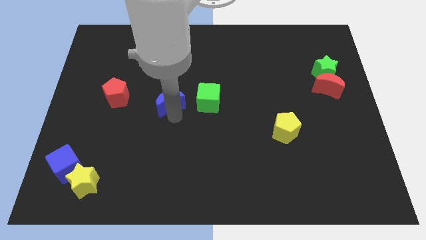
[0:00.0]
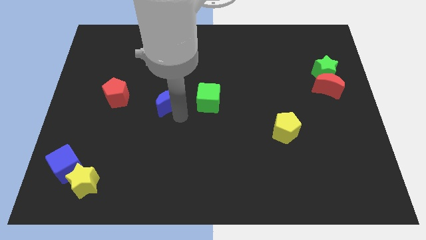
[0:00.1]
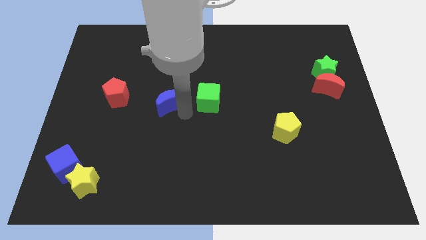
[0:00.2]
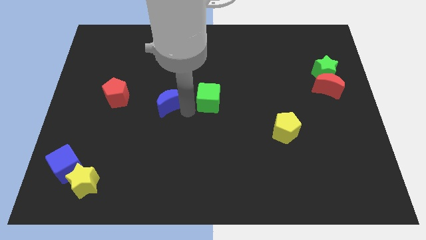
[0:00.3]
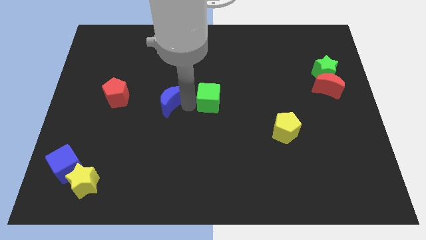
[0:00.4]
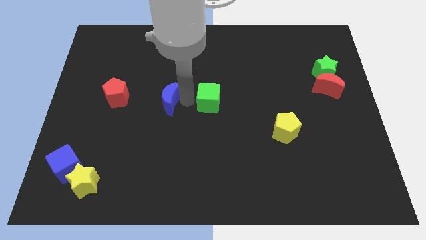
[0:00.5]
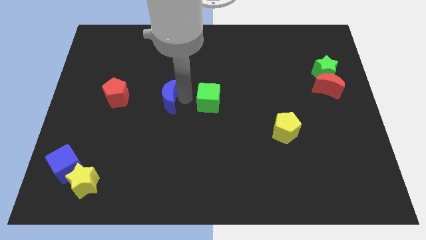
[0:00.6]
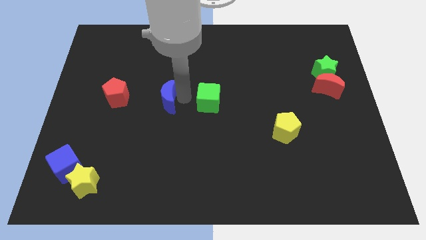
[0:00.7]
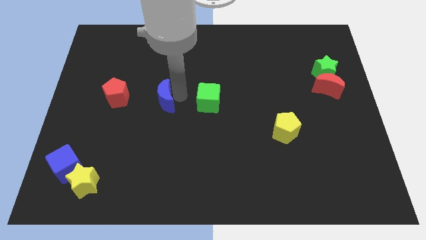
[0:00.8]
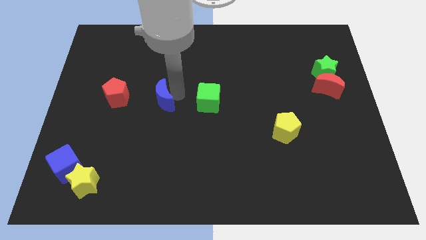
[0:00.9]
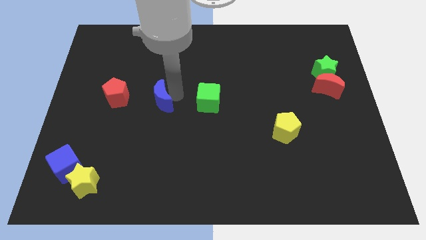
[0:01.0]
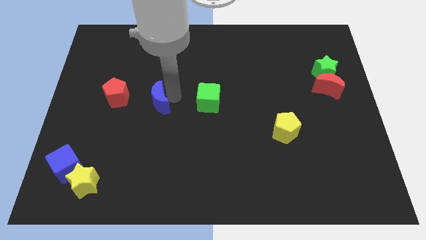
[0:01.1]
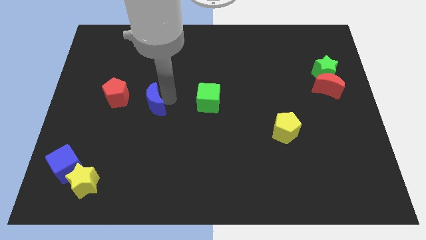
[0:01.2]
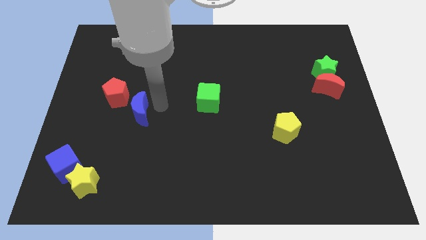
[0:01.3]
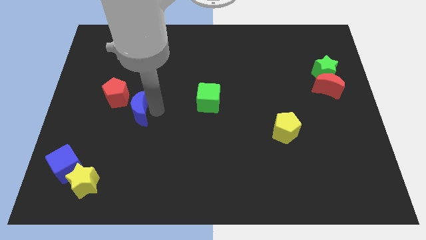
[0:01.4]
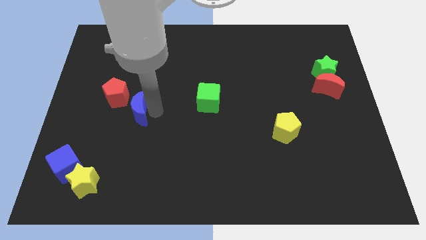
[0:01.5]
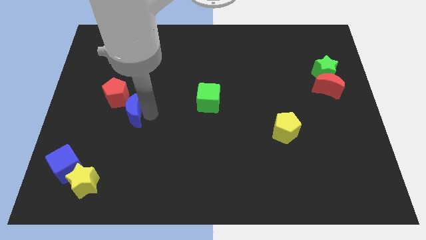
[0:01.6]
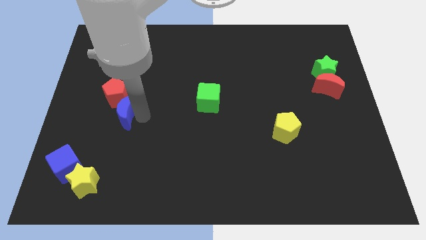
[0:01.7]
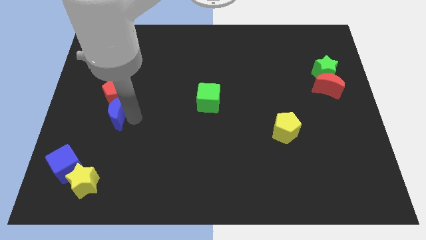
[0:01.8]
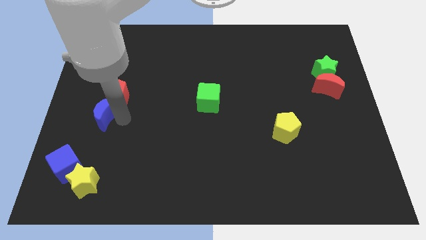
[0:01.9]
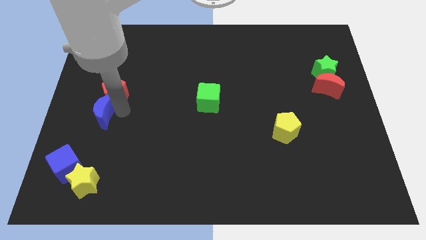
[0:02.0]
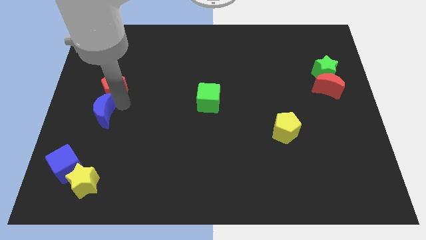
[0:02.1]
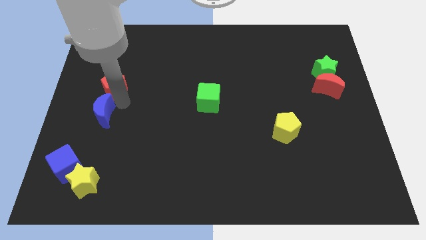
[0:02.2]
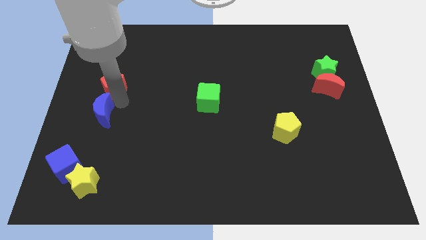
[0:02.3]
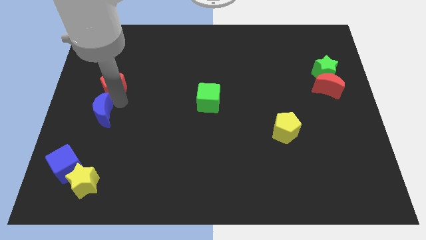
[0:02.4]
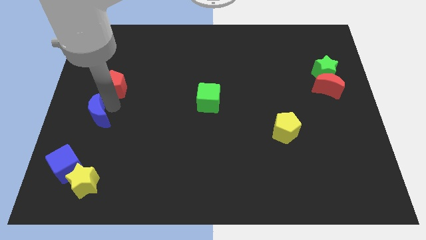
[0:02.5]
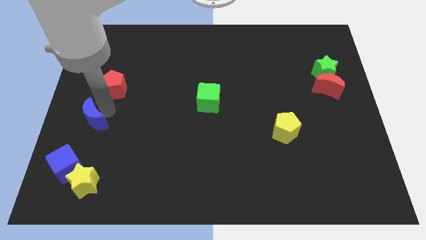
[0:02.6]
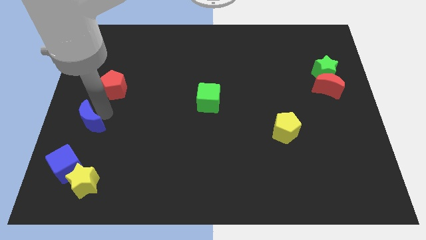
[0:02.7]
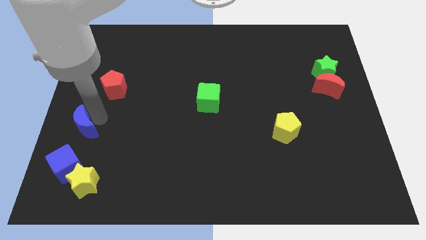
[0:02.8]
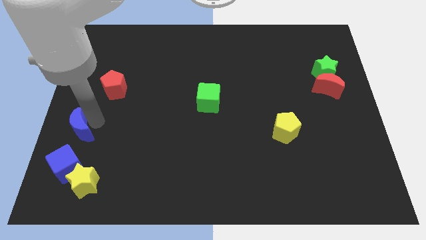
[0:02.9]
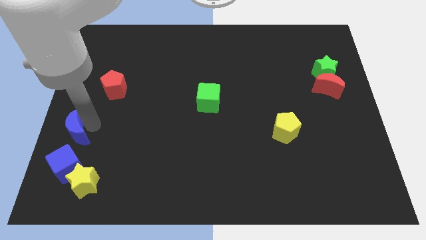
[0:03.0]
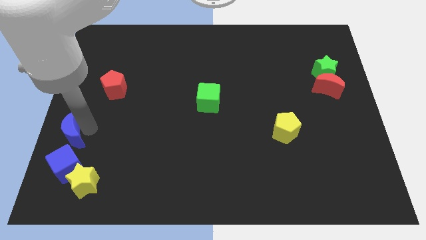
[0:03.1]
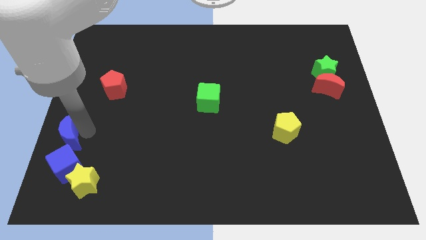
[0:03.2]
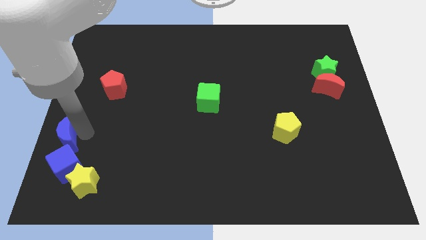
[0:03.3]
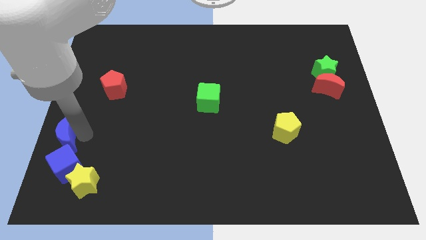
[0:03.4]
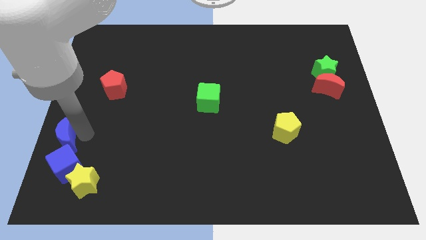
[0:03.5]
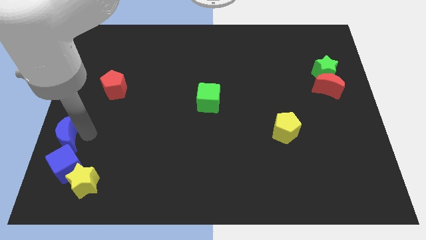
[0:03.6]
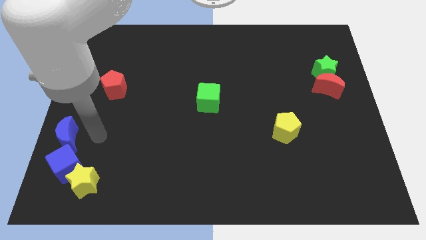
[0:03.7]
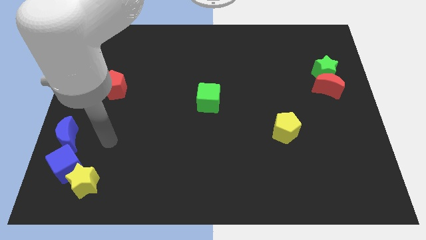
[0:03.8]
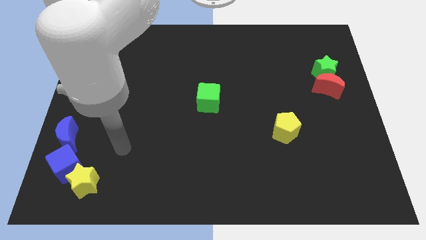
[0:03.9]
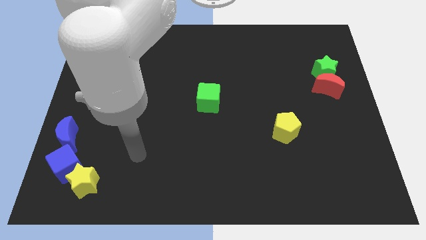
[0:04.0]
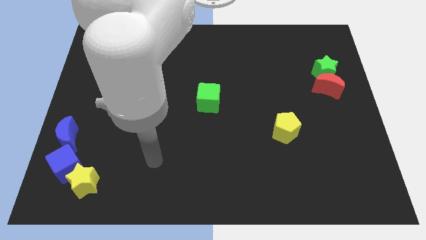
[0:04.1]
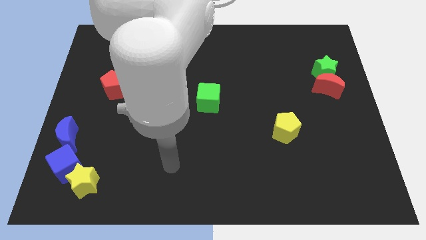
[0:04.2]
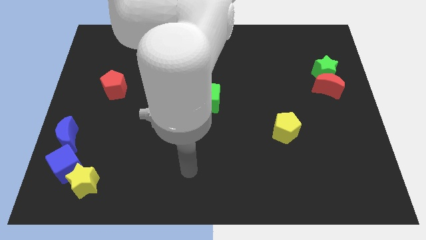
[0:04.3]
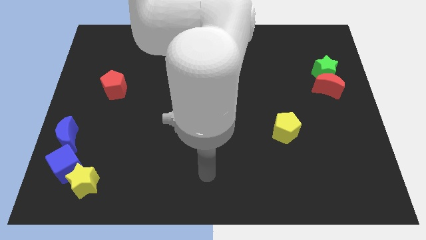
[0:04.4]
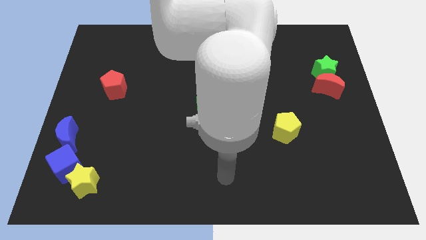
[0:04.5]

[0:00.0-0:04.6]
move the blue moon above the blue cube

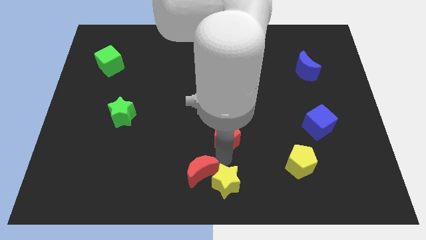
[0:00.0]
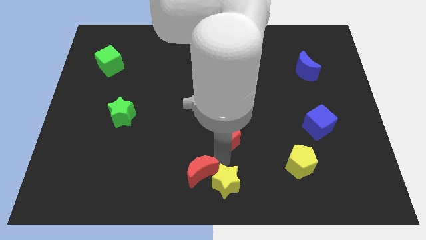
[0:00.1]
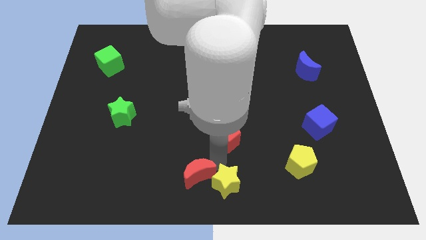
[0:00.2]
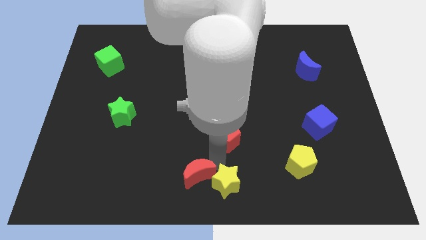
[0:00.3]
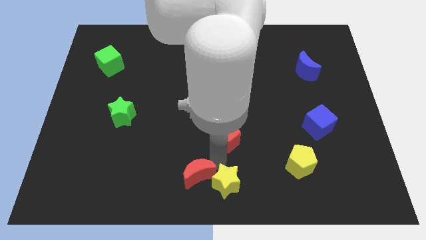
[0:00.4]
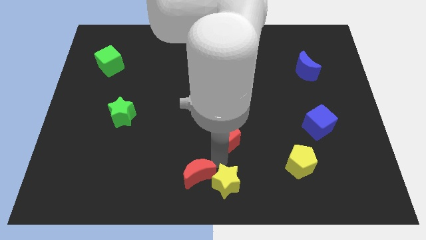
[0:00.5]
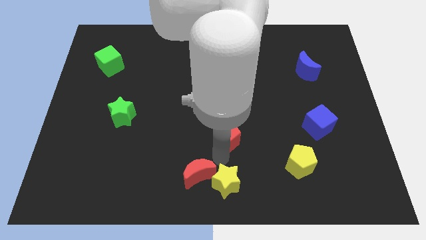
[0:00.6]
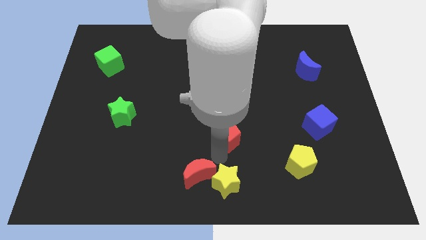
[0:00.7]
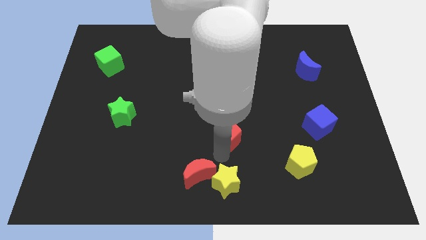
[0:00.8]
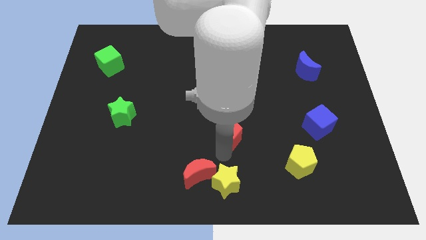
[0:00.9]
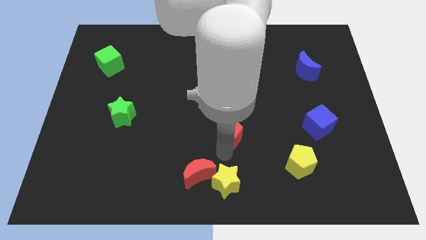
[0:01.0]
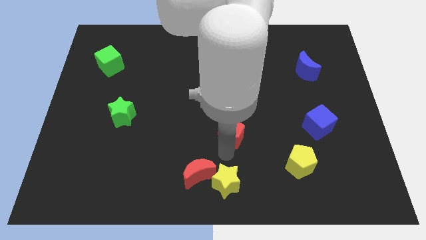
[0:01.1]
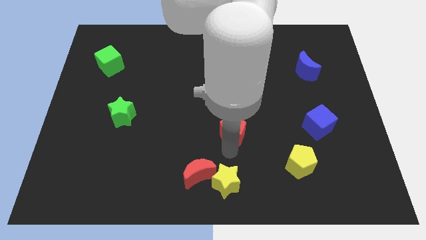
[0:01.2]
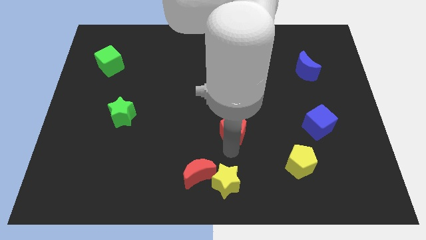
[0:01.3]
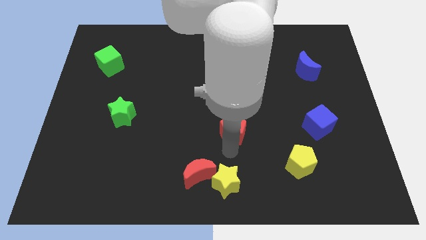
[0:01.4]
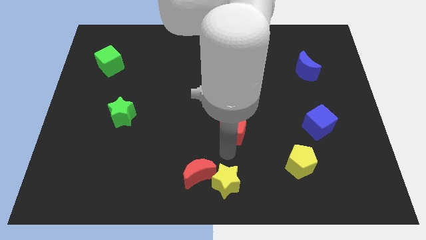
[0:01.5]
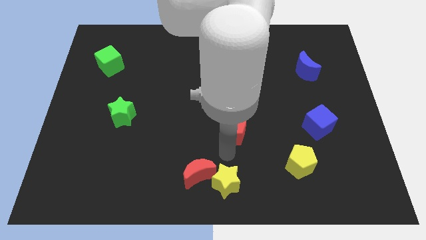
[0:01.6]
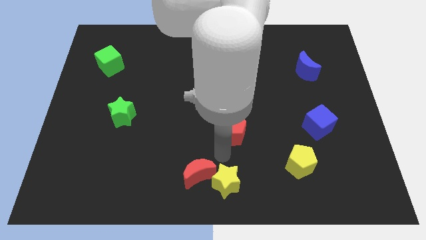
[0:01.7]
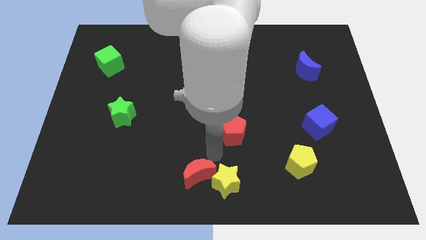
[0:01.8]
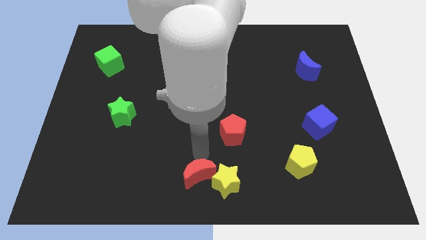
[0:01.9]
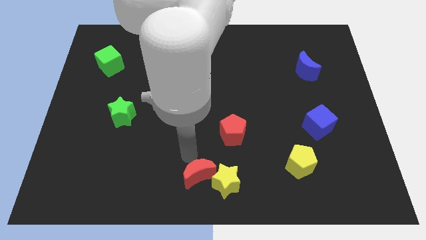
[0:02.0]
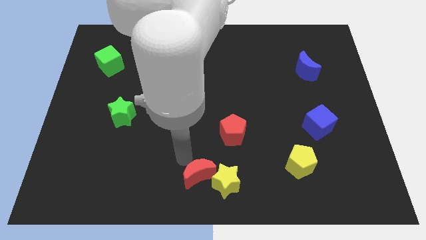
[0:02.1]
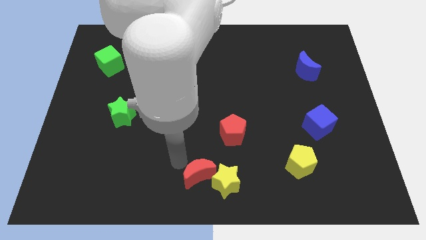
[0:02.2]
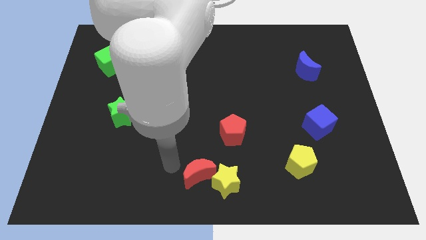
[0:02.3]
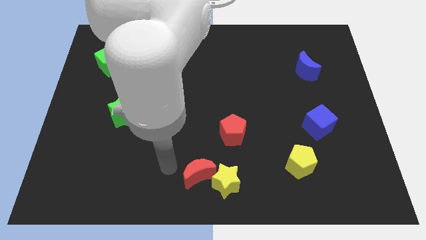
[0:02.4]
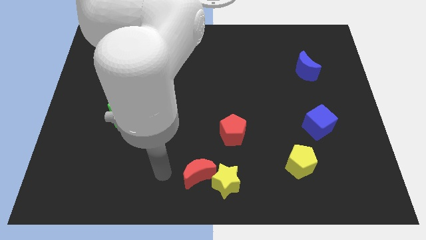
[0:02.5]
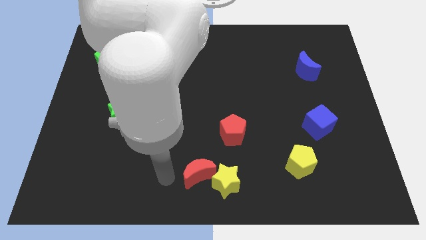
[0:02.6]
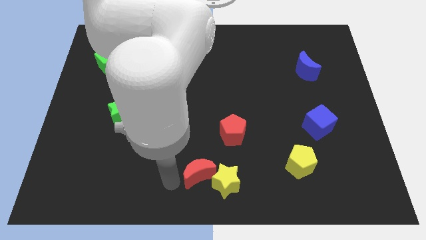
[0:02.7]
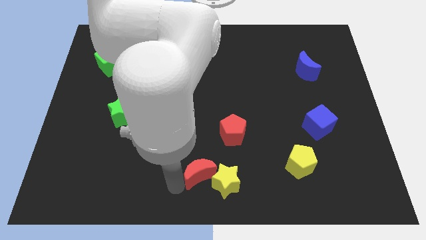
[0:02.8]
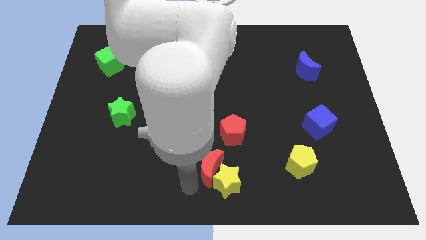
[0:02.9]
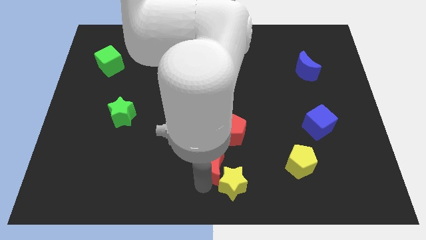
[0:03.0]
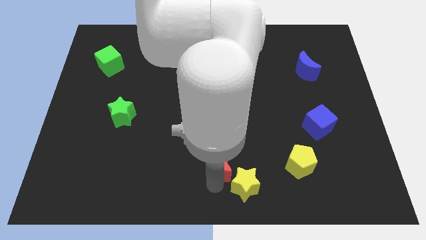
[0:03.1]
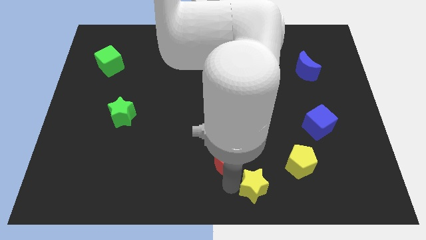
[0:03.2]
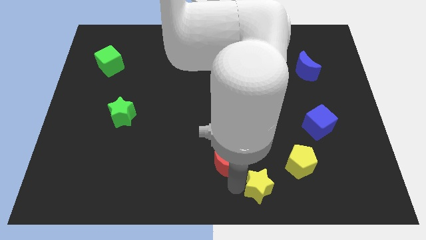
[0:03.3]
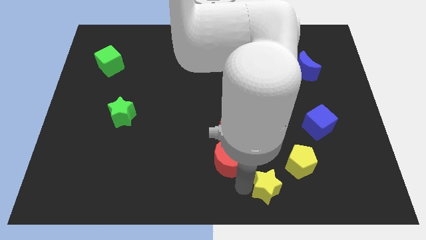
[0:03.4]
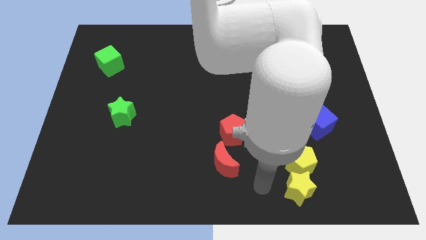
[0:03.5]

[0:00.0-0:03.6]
separate the red moon and yellow star

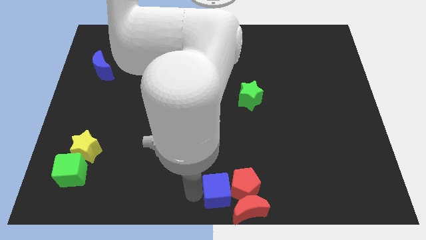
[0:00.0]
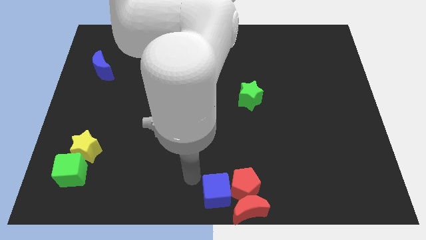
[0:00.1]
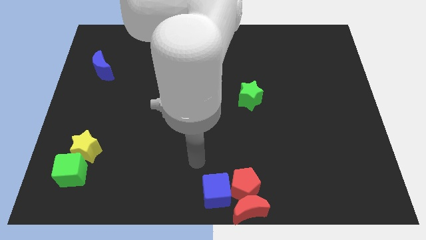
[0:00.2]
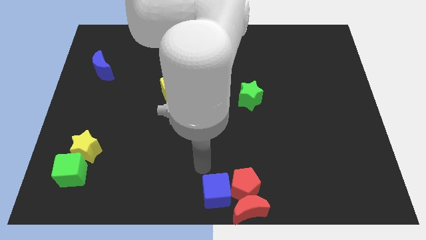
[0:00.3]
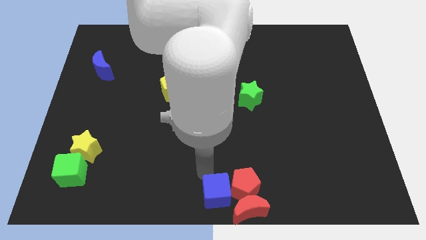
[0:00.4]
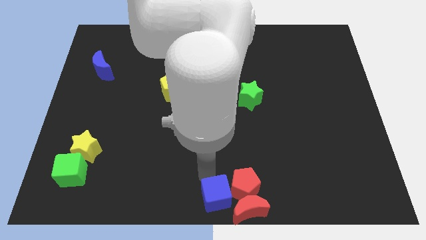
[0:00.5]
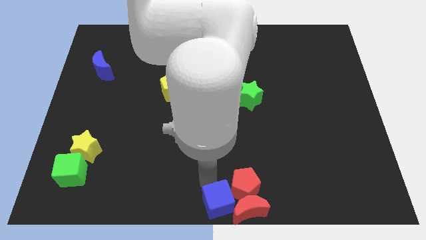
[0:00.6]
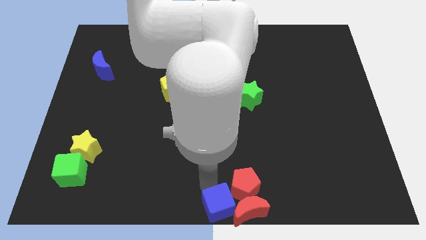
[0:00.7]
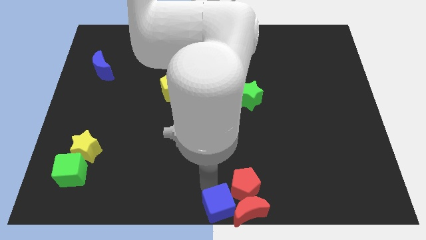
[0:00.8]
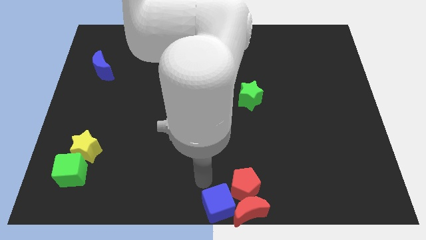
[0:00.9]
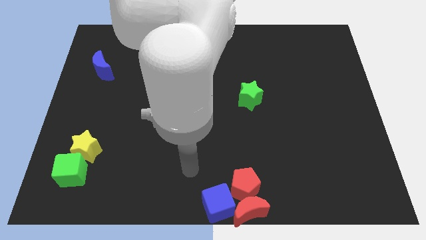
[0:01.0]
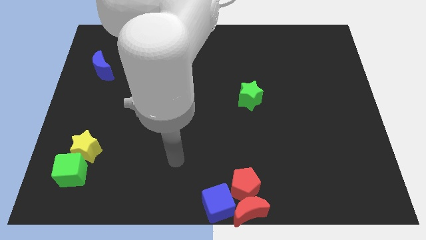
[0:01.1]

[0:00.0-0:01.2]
place blue cube near red crescent
